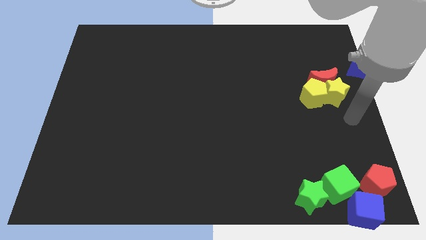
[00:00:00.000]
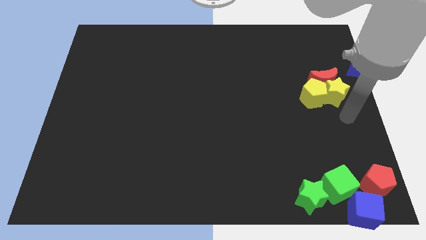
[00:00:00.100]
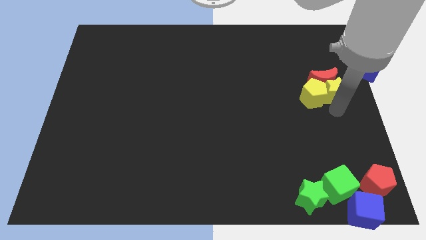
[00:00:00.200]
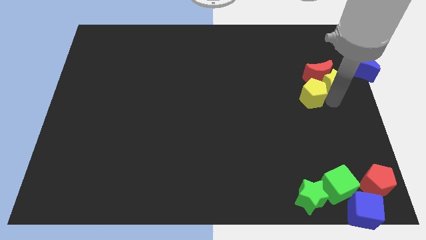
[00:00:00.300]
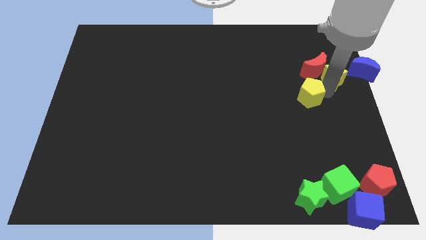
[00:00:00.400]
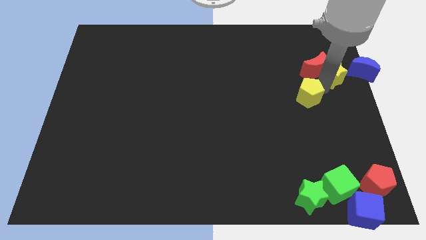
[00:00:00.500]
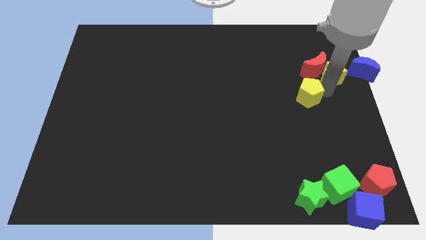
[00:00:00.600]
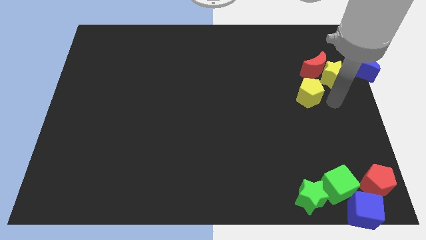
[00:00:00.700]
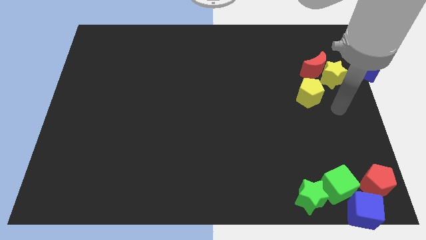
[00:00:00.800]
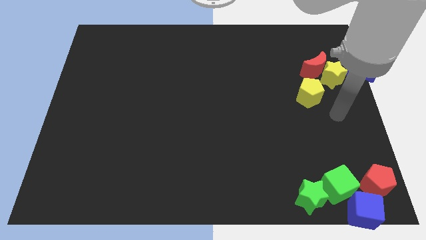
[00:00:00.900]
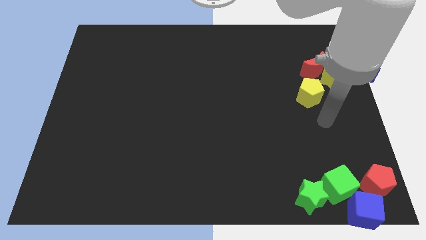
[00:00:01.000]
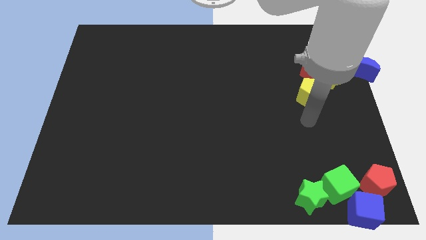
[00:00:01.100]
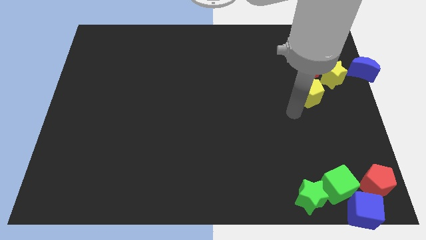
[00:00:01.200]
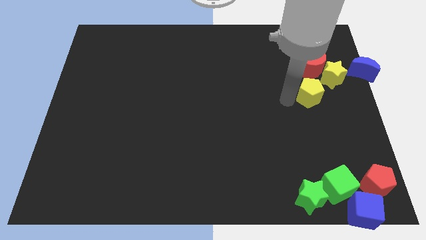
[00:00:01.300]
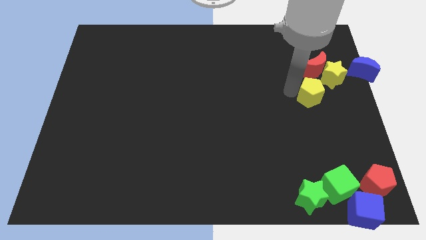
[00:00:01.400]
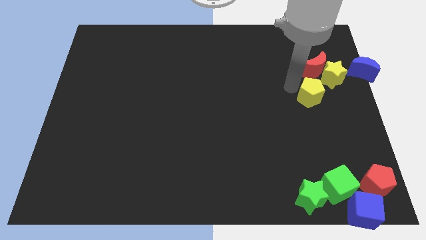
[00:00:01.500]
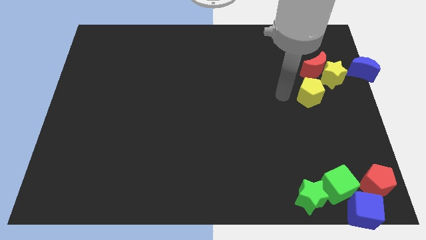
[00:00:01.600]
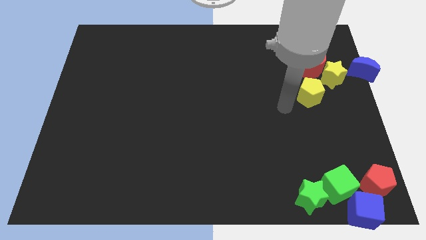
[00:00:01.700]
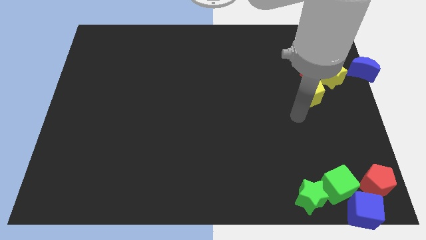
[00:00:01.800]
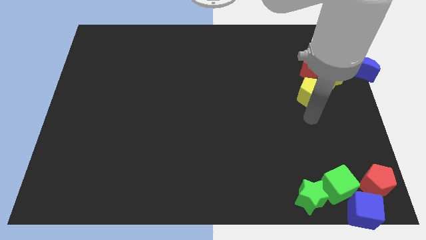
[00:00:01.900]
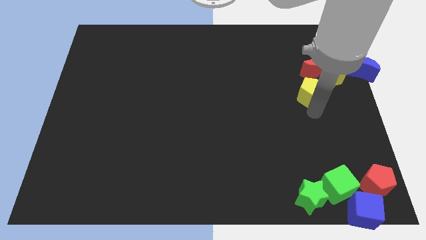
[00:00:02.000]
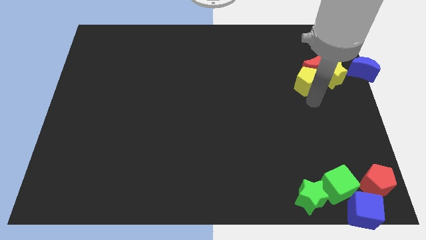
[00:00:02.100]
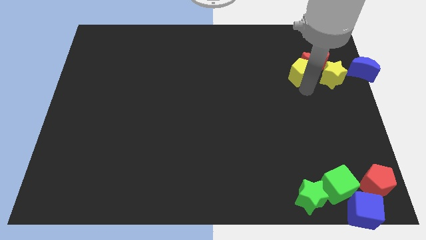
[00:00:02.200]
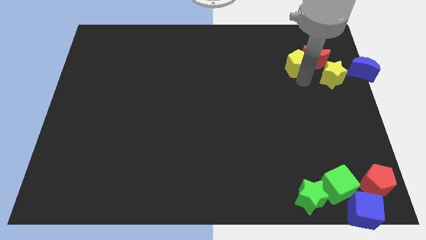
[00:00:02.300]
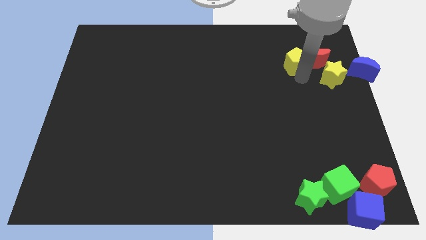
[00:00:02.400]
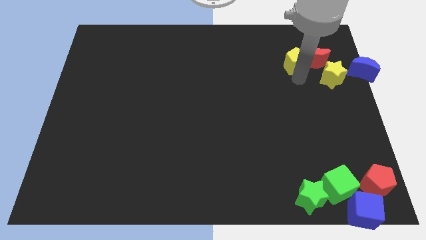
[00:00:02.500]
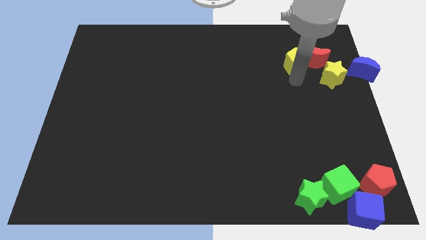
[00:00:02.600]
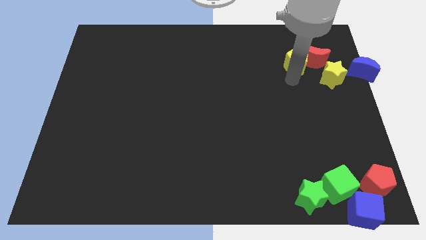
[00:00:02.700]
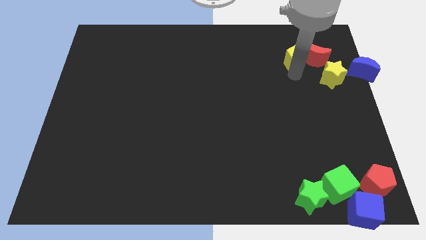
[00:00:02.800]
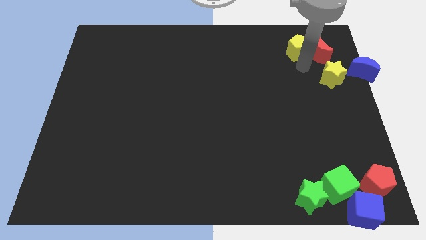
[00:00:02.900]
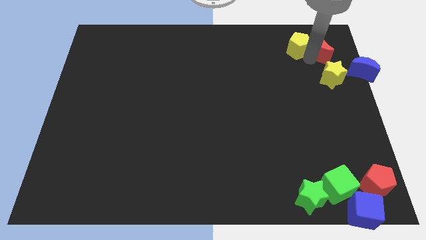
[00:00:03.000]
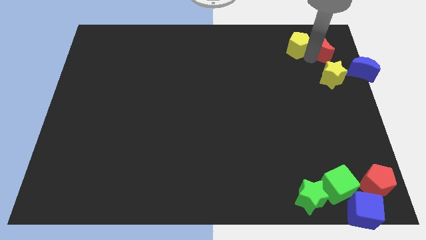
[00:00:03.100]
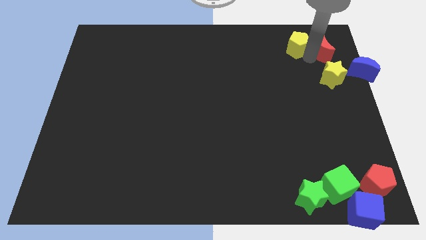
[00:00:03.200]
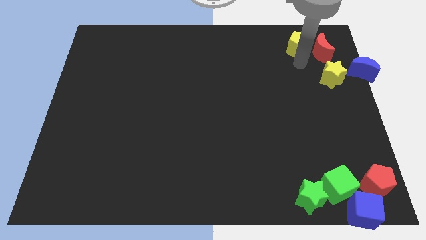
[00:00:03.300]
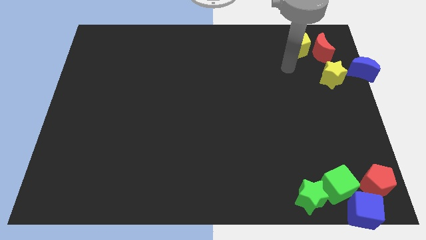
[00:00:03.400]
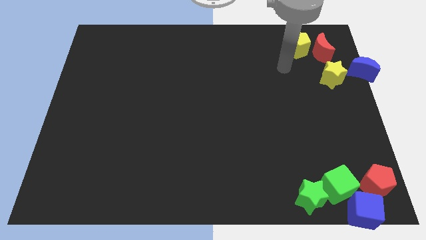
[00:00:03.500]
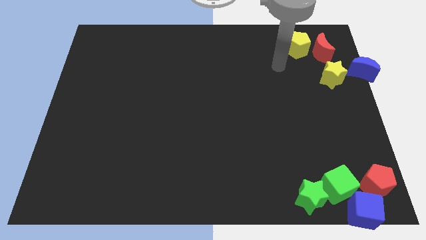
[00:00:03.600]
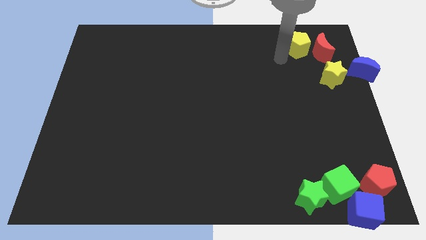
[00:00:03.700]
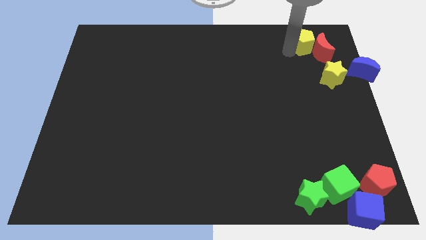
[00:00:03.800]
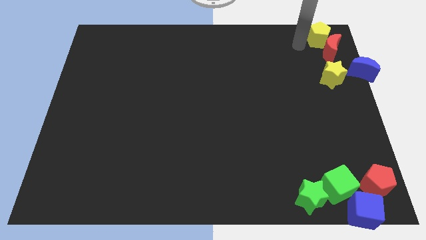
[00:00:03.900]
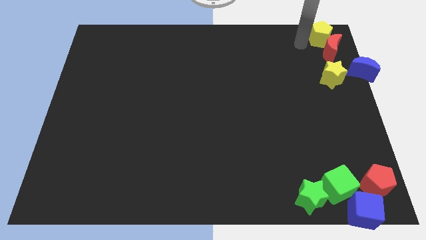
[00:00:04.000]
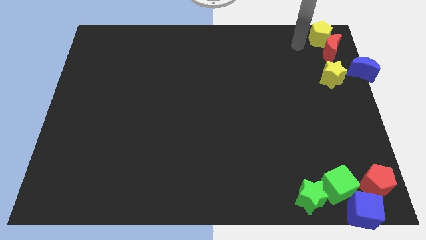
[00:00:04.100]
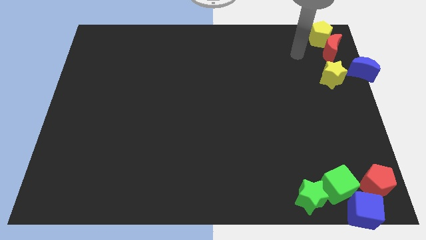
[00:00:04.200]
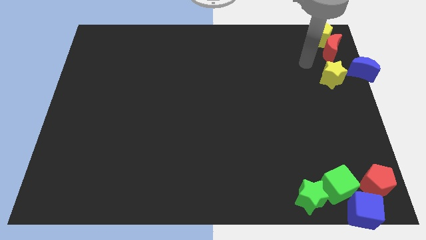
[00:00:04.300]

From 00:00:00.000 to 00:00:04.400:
push the yellow block to the top of the red

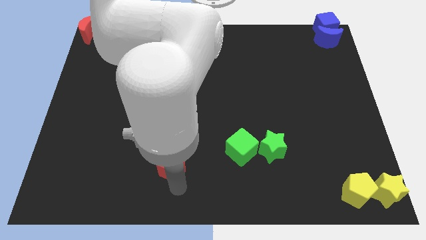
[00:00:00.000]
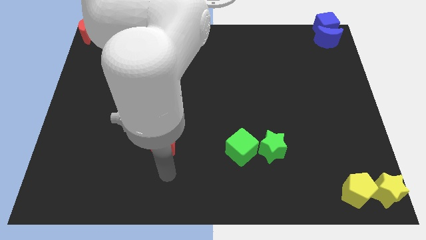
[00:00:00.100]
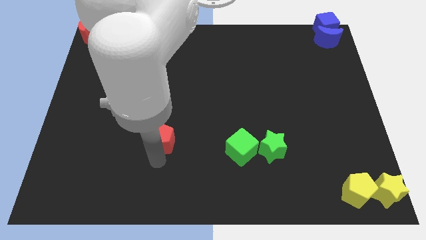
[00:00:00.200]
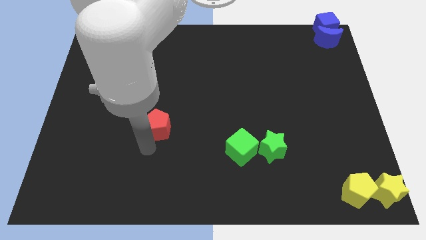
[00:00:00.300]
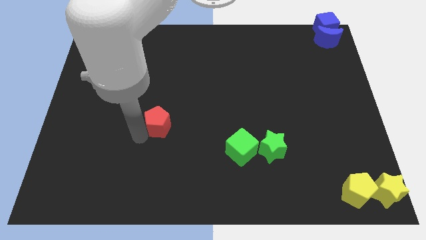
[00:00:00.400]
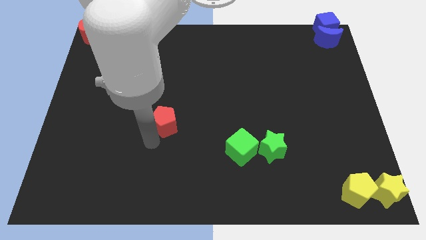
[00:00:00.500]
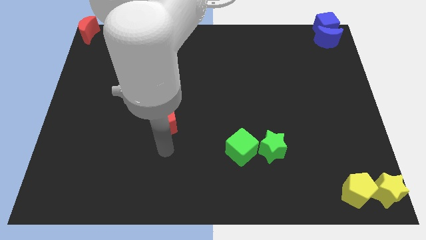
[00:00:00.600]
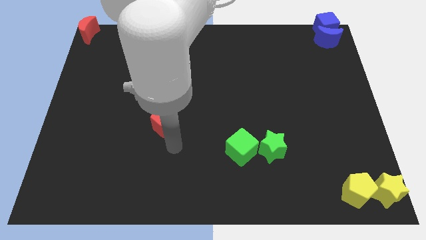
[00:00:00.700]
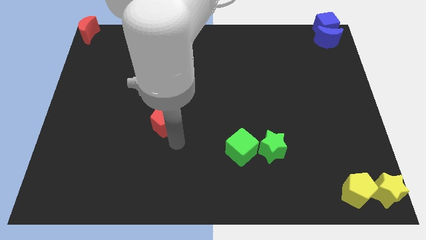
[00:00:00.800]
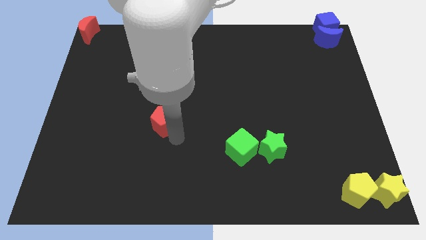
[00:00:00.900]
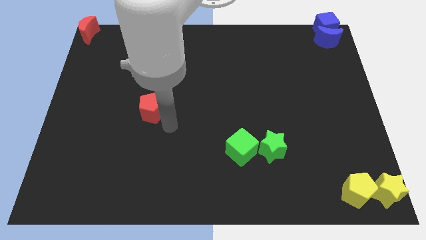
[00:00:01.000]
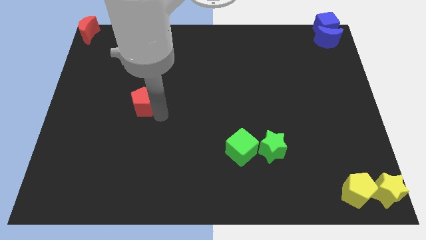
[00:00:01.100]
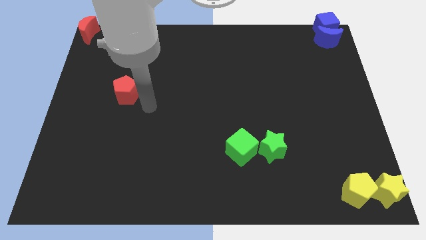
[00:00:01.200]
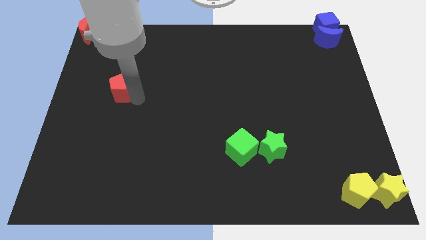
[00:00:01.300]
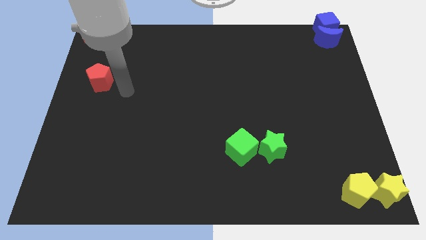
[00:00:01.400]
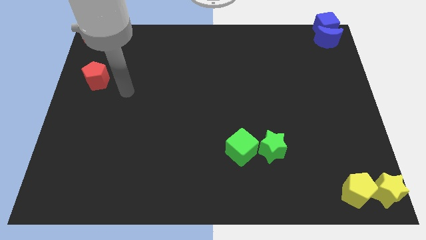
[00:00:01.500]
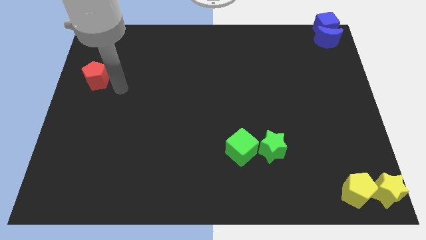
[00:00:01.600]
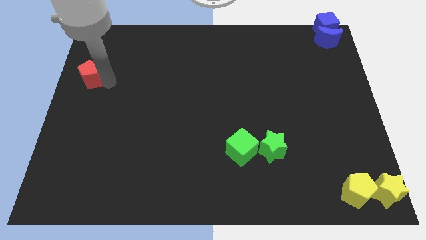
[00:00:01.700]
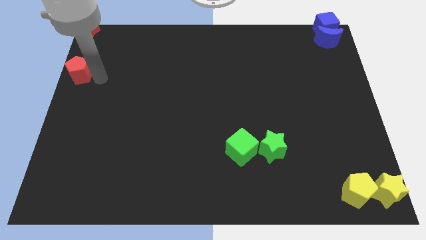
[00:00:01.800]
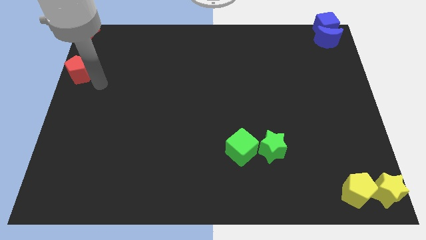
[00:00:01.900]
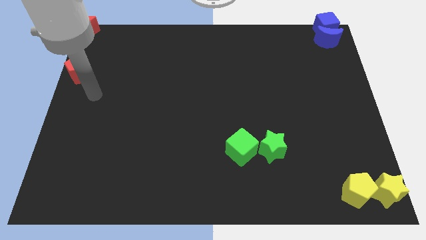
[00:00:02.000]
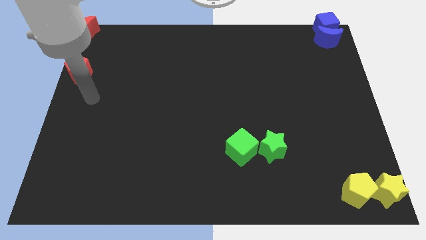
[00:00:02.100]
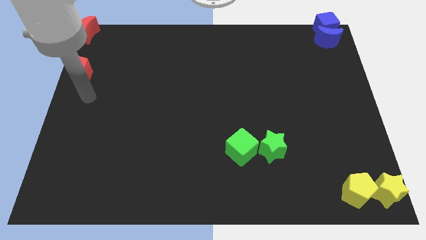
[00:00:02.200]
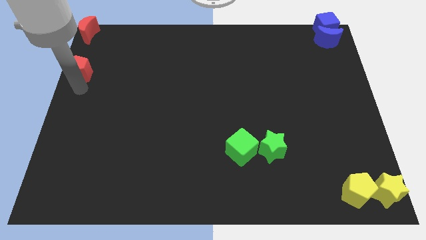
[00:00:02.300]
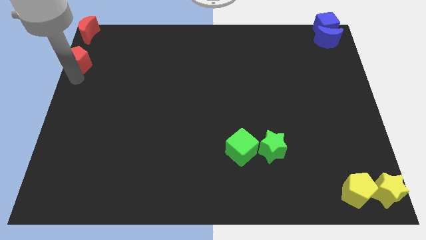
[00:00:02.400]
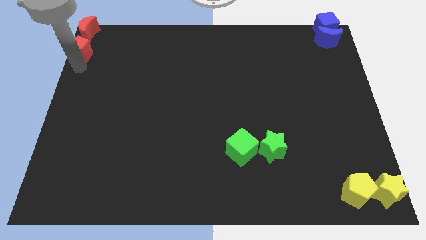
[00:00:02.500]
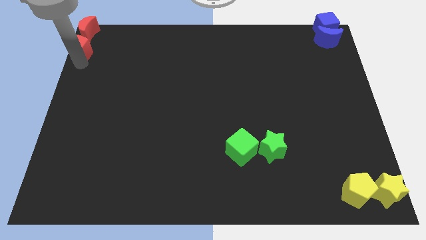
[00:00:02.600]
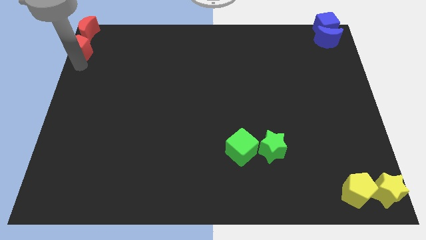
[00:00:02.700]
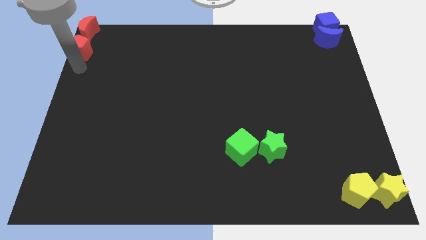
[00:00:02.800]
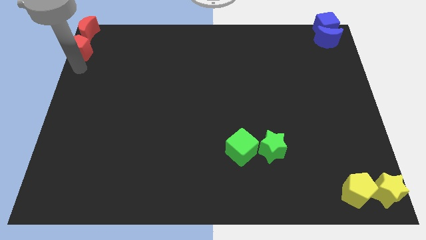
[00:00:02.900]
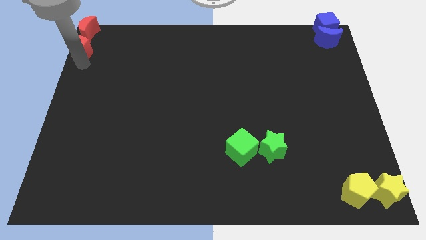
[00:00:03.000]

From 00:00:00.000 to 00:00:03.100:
push the red pentagon towards bottom of the red crescent

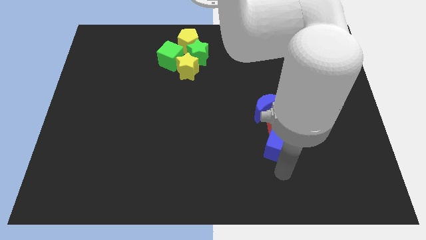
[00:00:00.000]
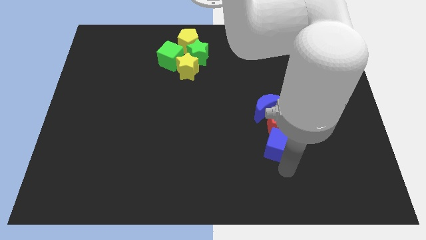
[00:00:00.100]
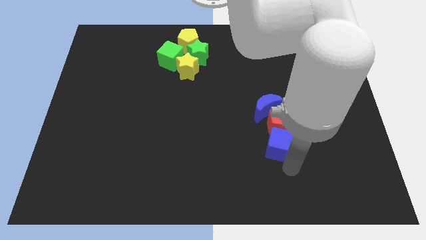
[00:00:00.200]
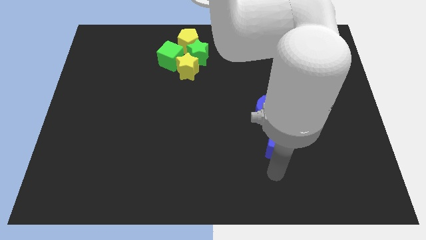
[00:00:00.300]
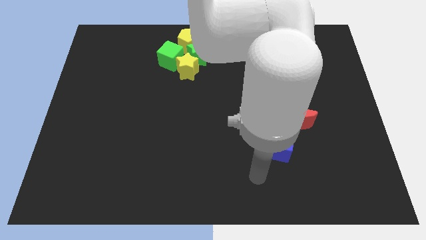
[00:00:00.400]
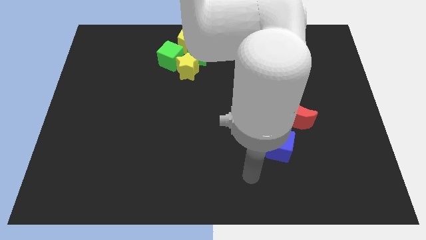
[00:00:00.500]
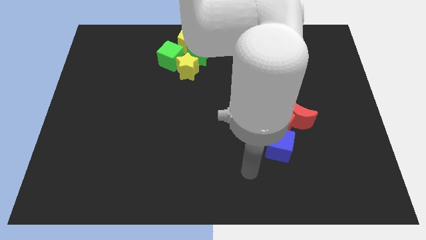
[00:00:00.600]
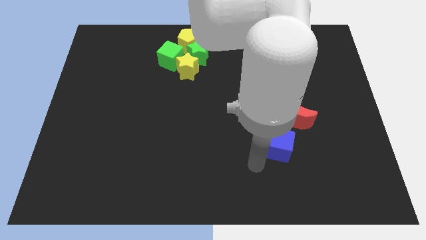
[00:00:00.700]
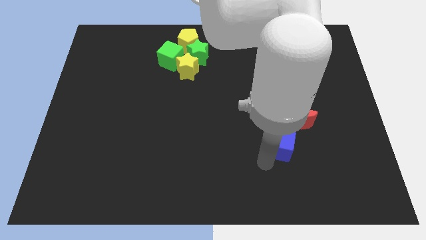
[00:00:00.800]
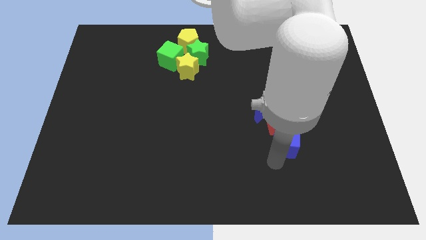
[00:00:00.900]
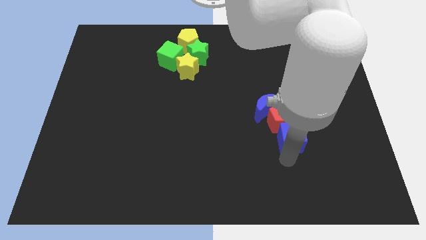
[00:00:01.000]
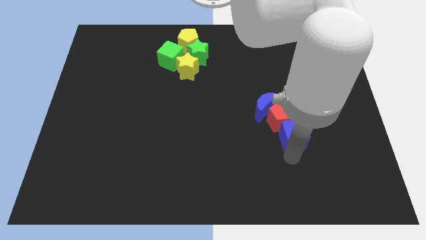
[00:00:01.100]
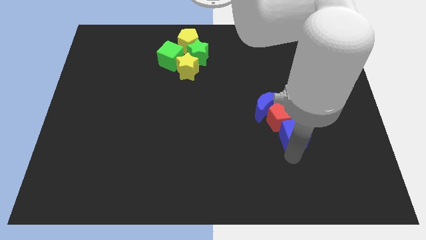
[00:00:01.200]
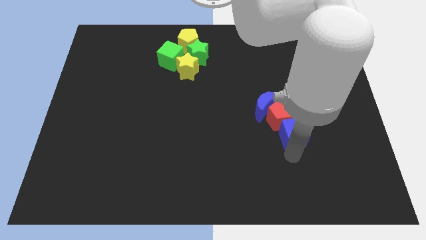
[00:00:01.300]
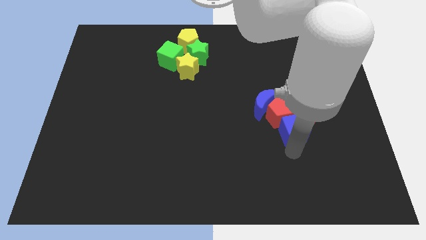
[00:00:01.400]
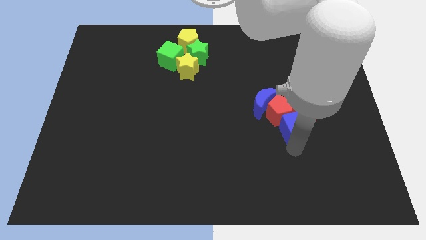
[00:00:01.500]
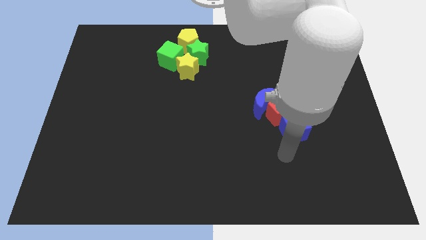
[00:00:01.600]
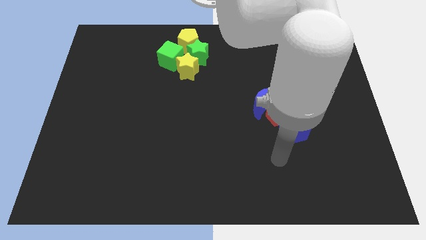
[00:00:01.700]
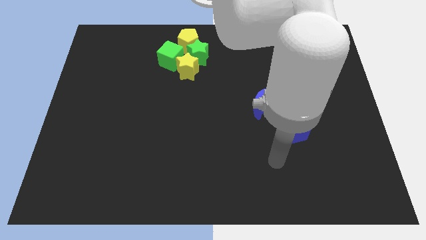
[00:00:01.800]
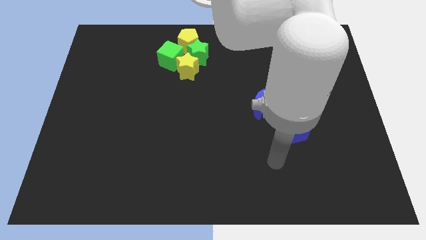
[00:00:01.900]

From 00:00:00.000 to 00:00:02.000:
push blue cube upwards
